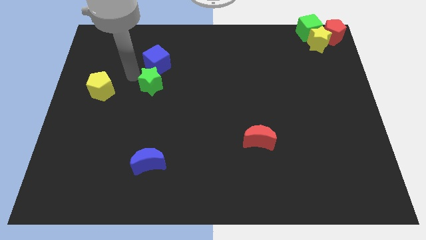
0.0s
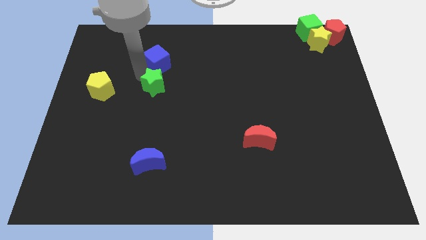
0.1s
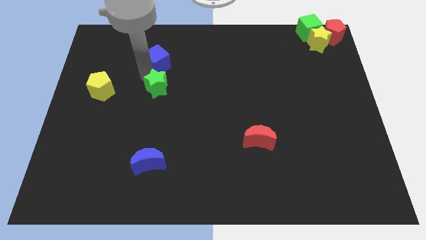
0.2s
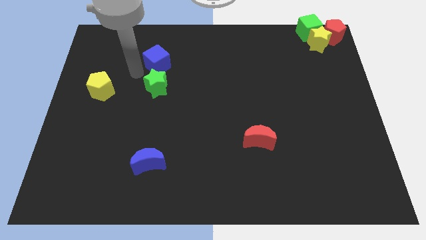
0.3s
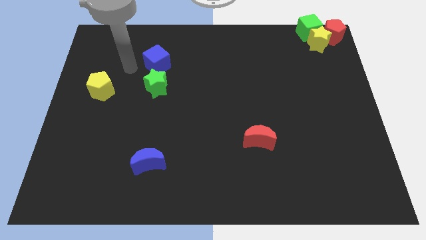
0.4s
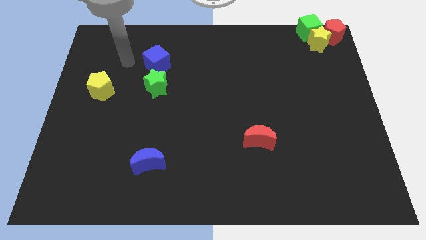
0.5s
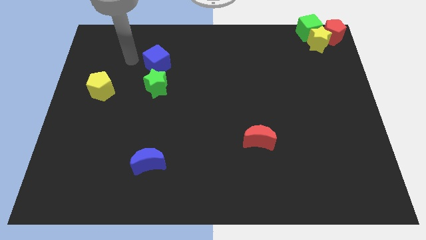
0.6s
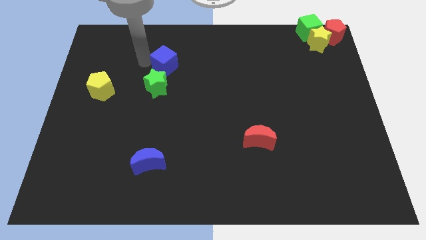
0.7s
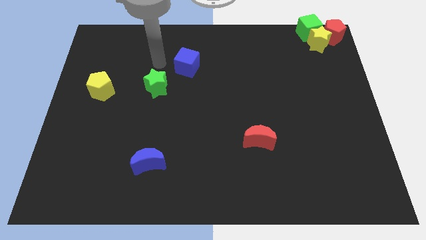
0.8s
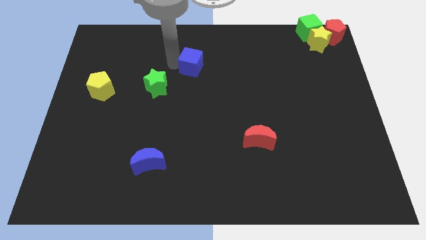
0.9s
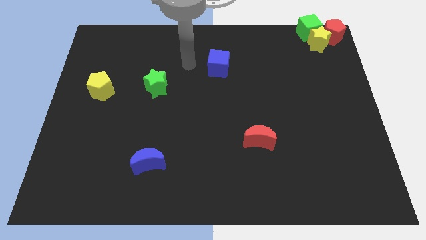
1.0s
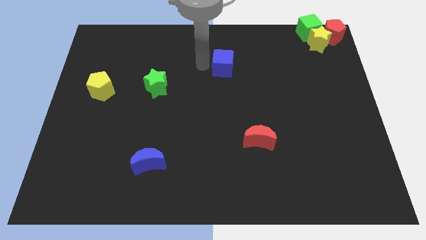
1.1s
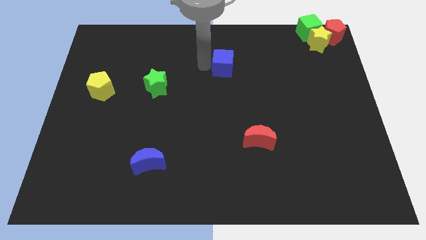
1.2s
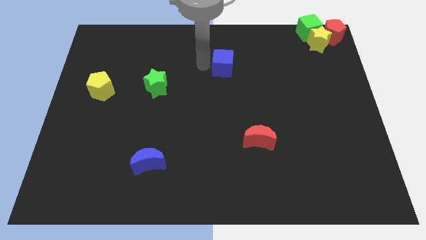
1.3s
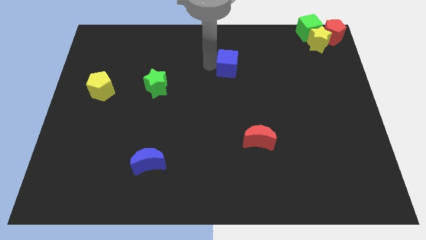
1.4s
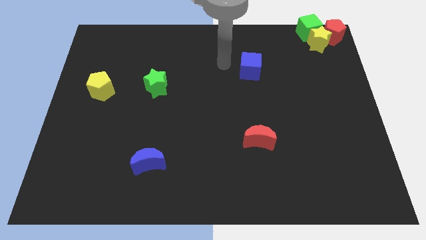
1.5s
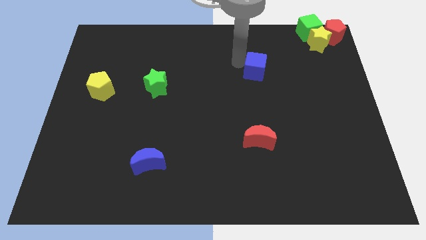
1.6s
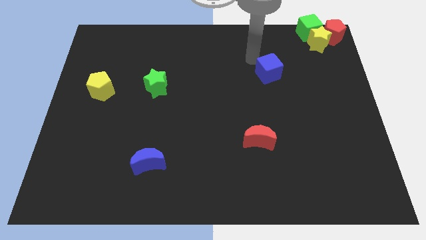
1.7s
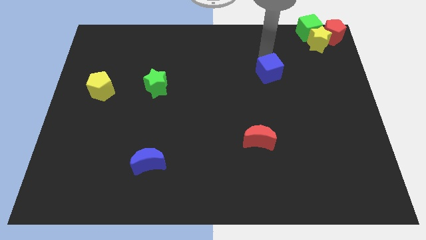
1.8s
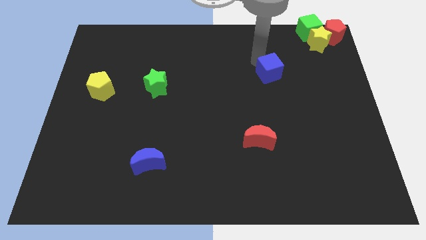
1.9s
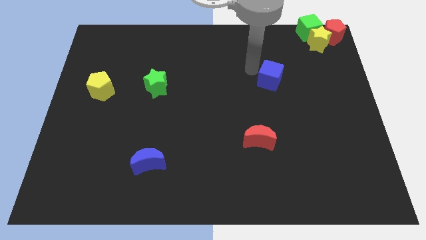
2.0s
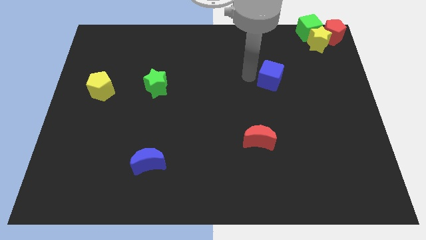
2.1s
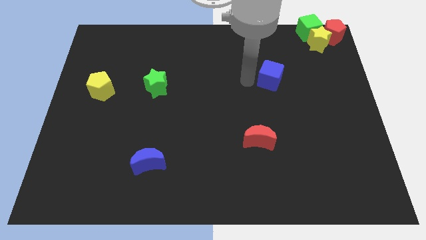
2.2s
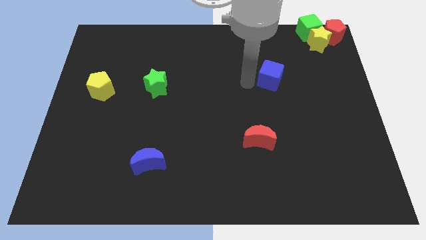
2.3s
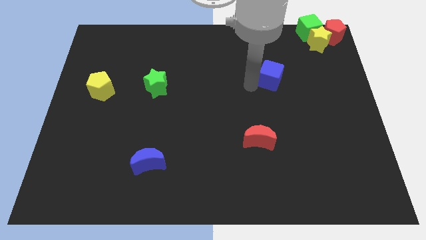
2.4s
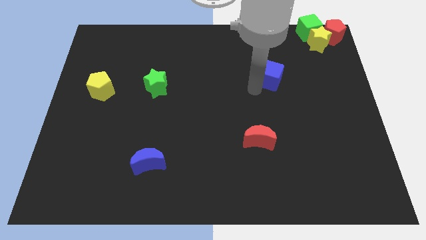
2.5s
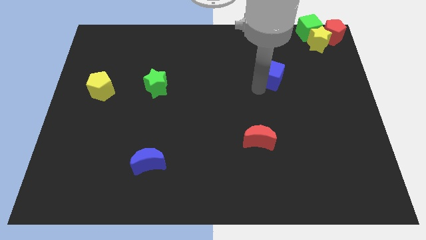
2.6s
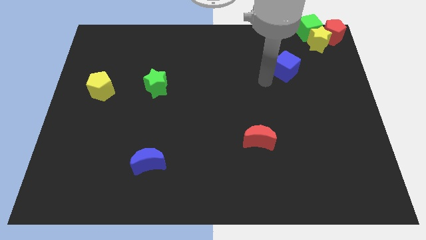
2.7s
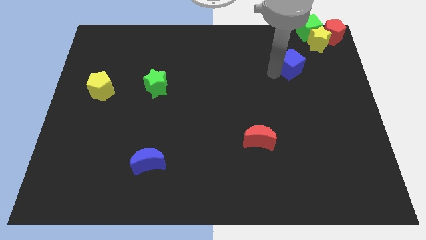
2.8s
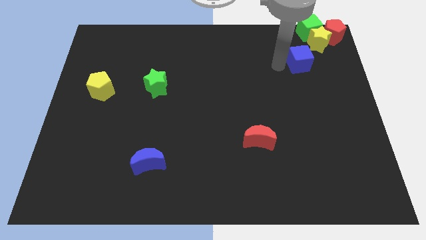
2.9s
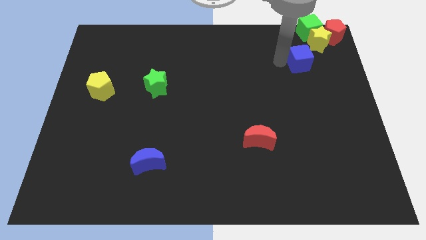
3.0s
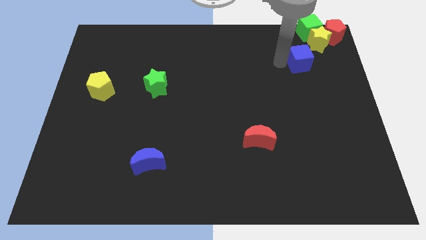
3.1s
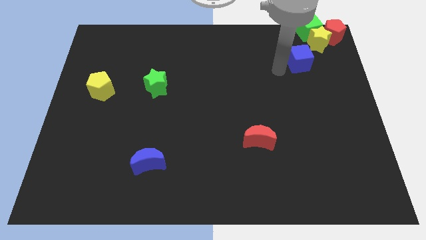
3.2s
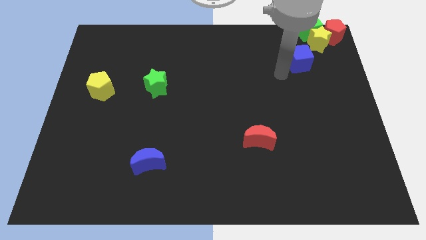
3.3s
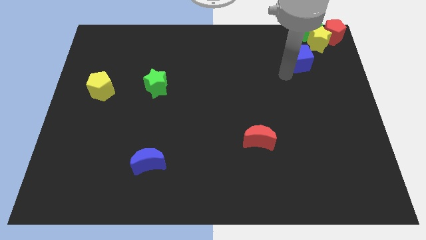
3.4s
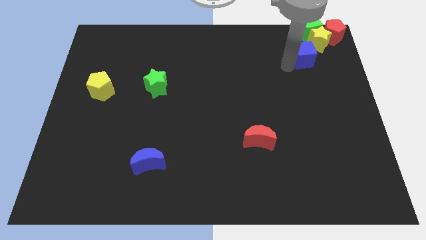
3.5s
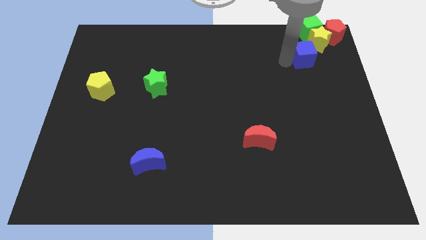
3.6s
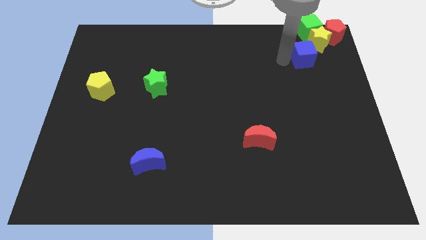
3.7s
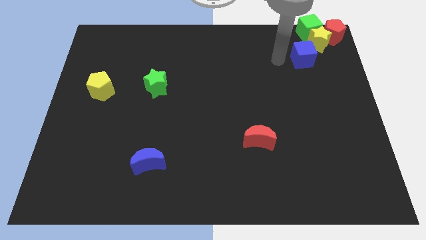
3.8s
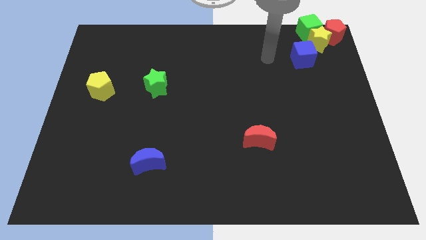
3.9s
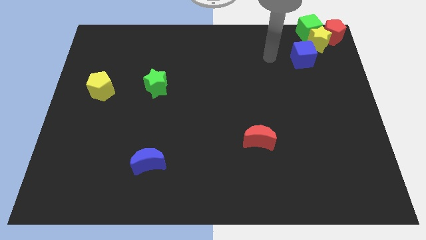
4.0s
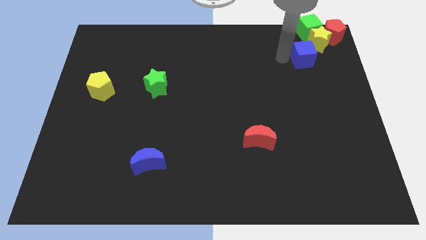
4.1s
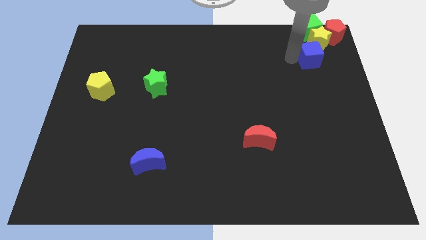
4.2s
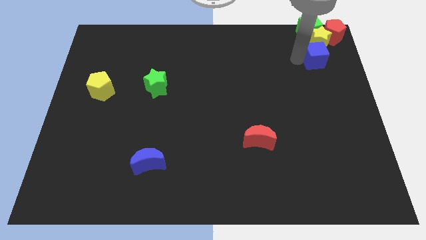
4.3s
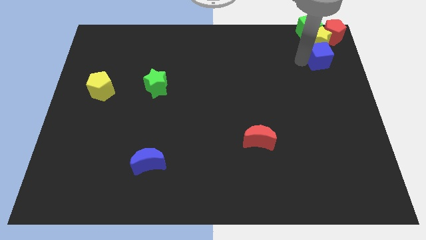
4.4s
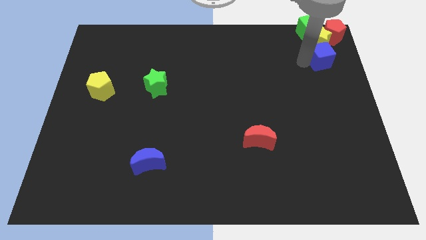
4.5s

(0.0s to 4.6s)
place the blue cube below the yellow star

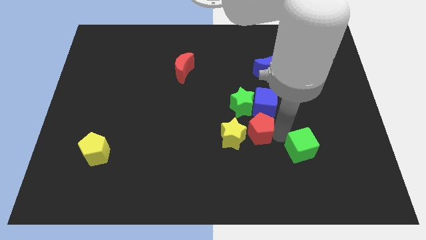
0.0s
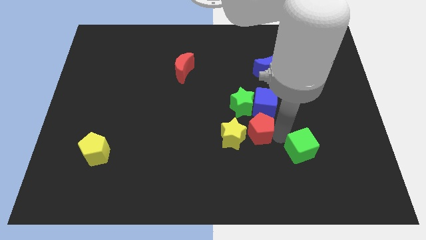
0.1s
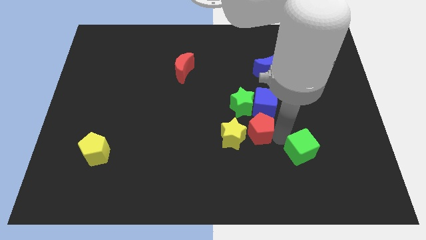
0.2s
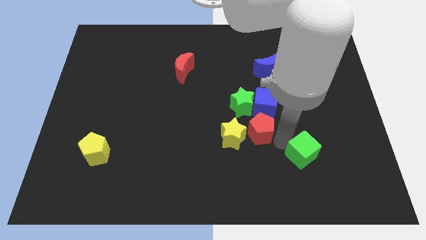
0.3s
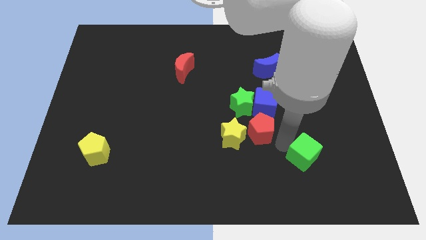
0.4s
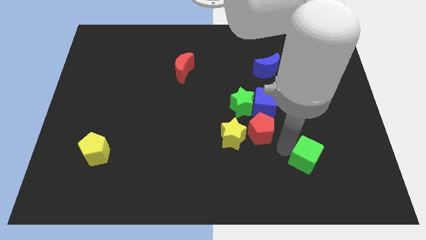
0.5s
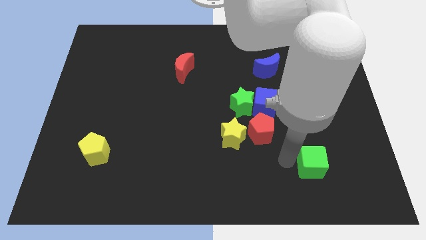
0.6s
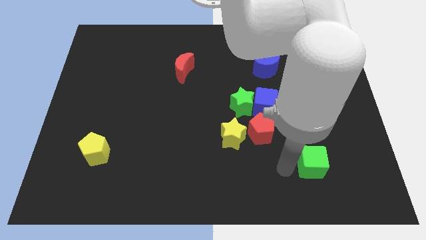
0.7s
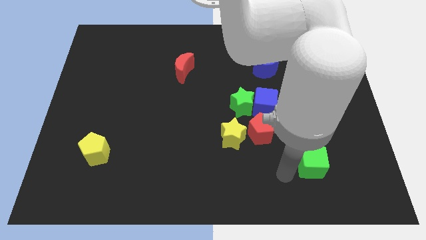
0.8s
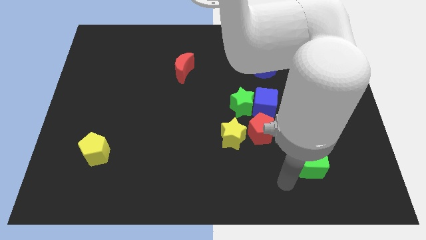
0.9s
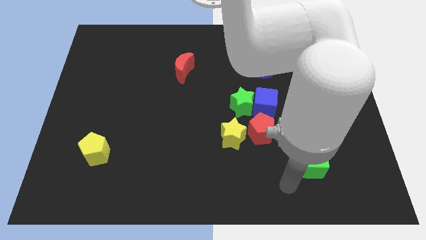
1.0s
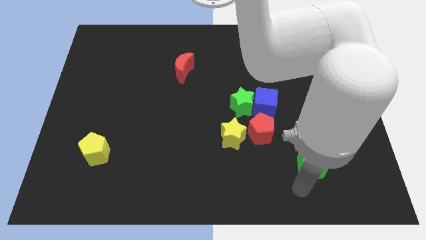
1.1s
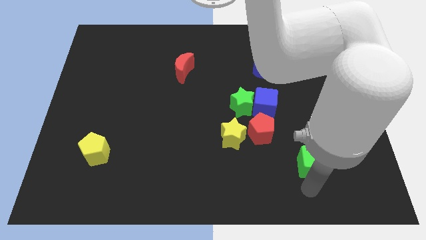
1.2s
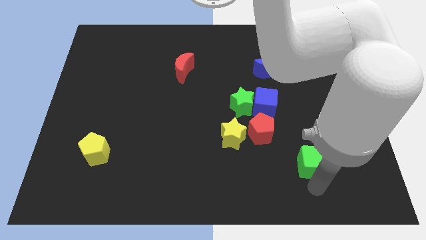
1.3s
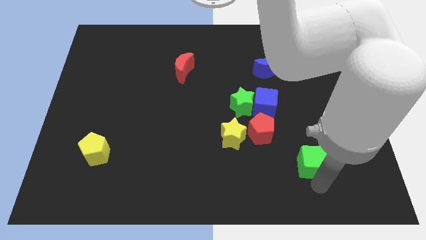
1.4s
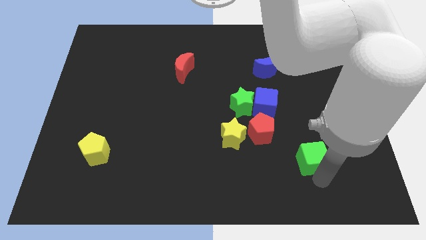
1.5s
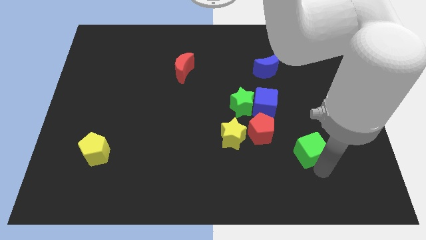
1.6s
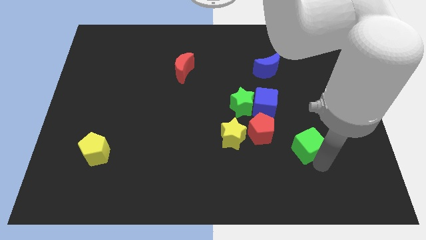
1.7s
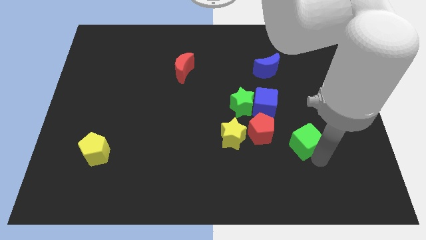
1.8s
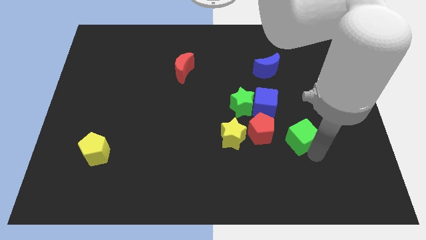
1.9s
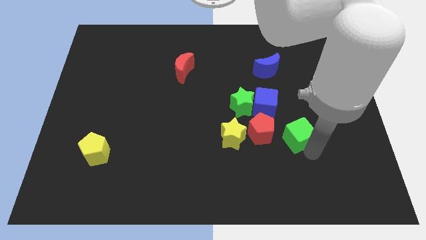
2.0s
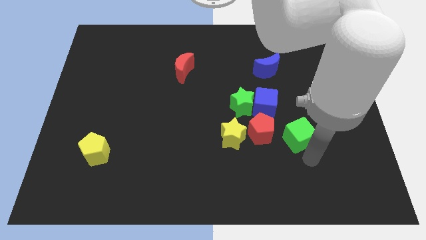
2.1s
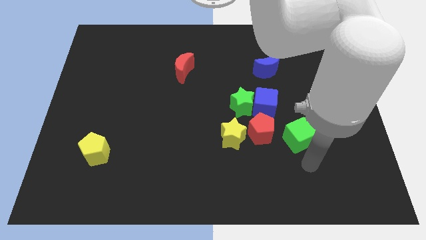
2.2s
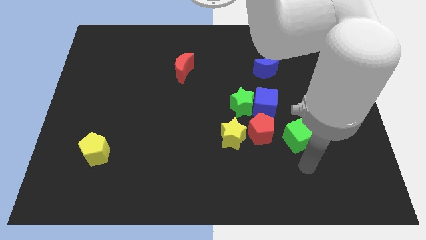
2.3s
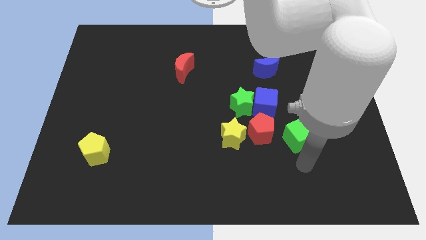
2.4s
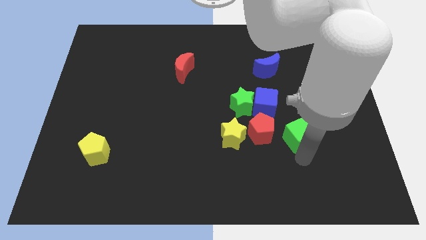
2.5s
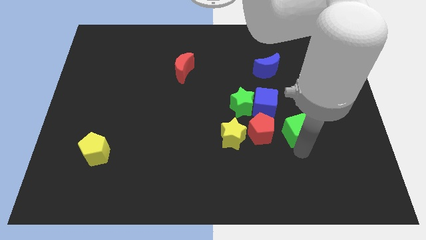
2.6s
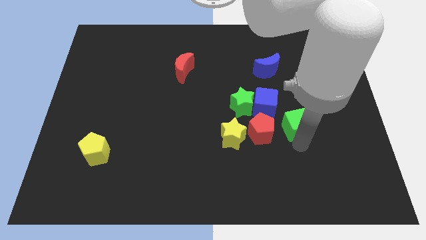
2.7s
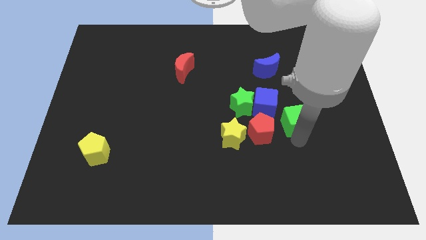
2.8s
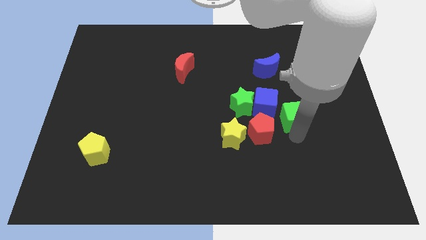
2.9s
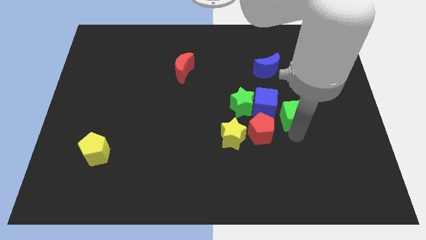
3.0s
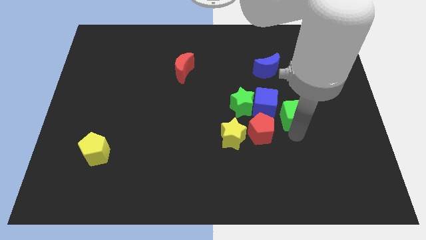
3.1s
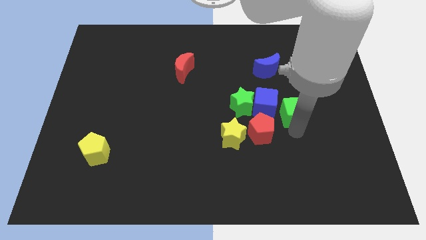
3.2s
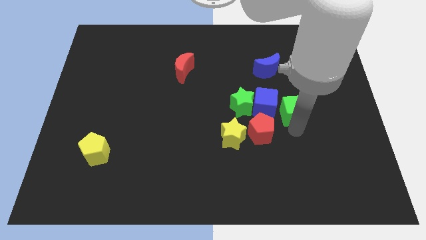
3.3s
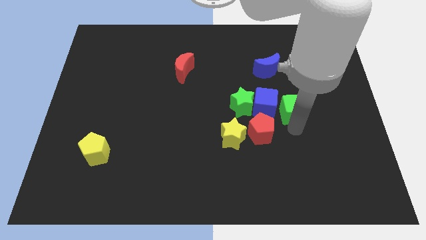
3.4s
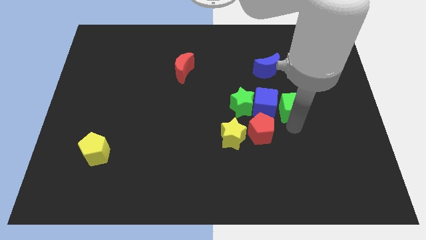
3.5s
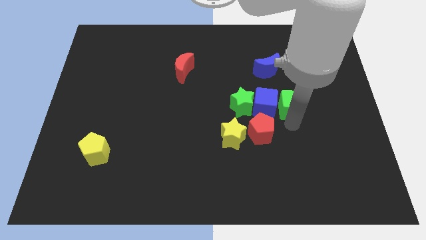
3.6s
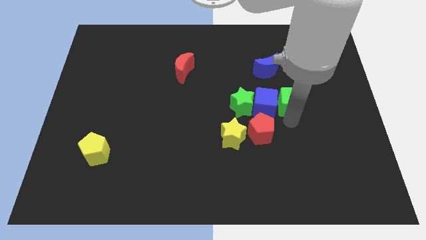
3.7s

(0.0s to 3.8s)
place green cube to the right of blue cube

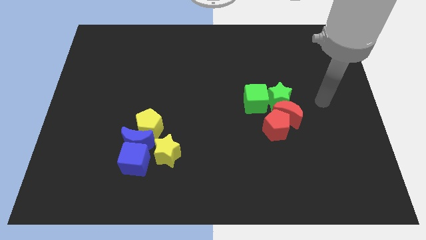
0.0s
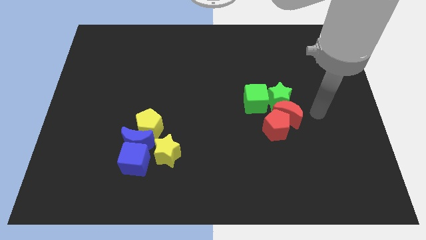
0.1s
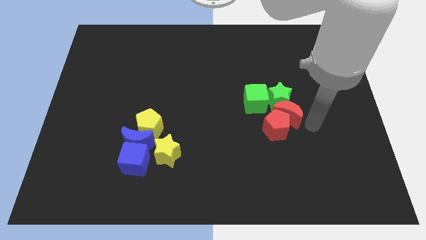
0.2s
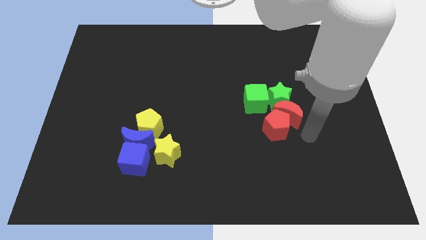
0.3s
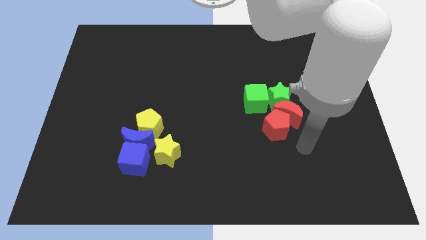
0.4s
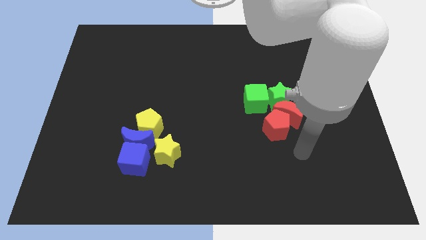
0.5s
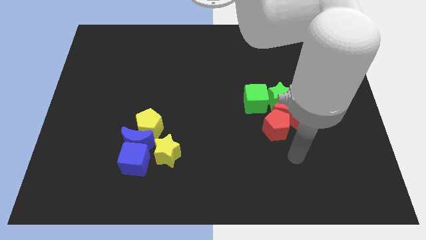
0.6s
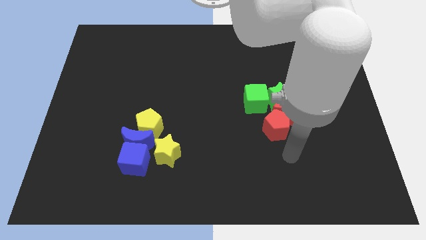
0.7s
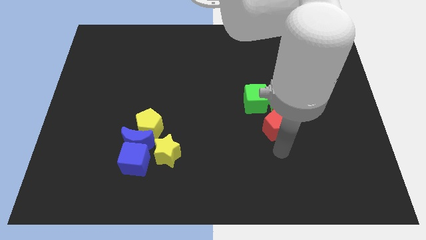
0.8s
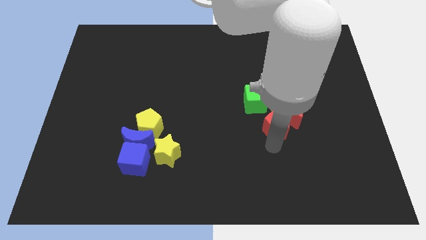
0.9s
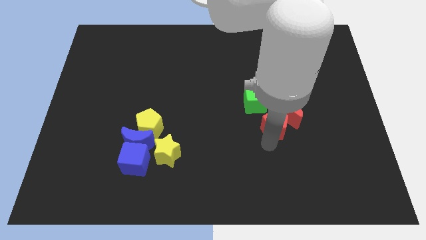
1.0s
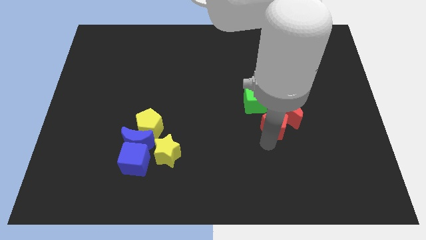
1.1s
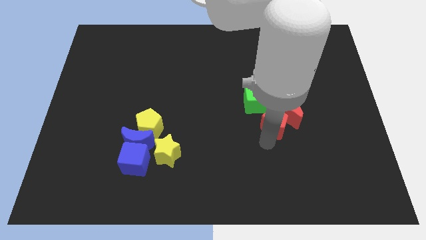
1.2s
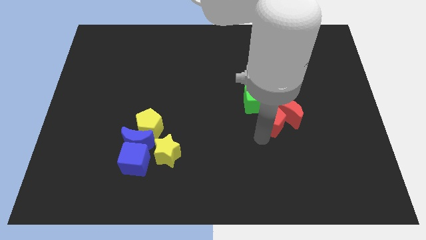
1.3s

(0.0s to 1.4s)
slightly move the red pentagon towards top
